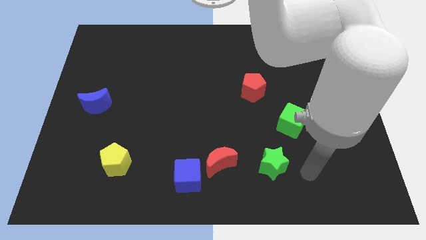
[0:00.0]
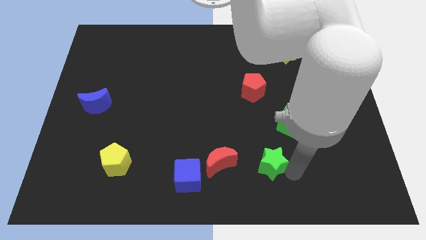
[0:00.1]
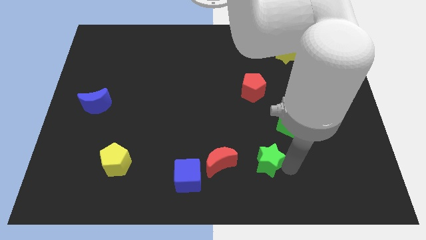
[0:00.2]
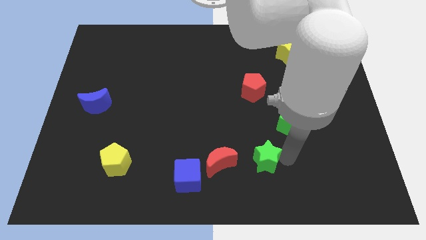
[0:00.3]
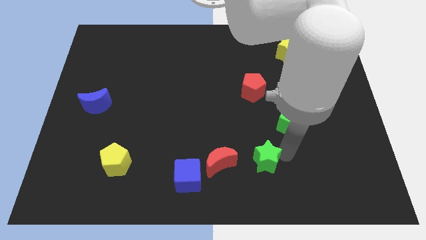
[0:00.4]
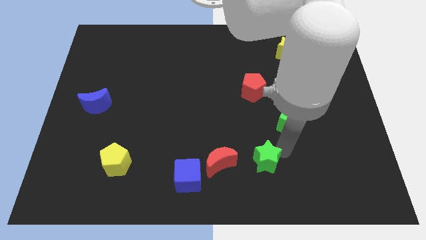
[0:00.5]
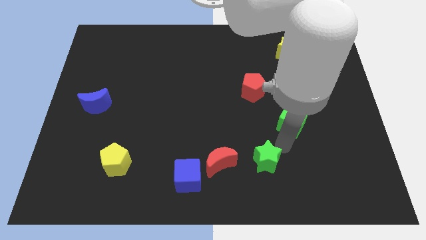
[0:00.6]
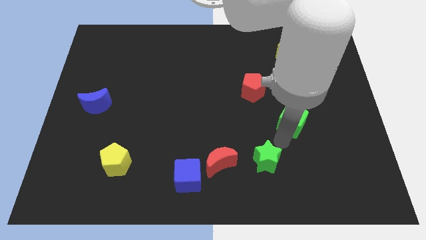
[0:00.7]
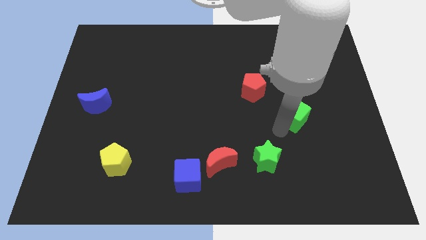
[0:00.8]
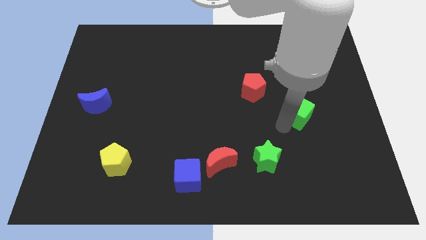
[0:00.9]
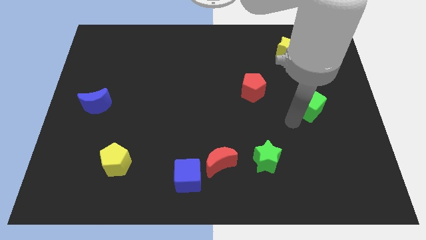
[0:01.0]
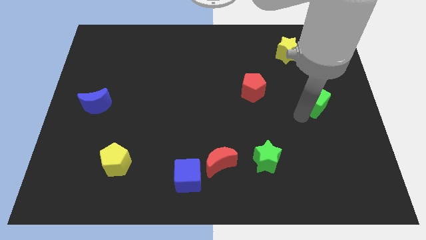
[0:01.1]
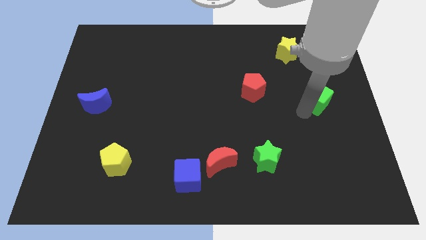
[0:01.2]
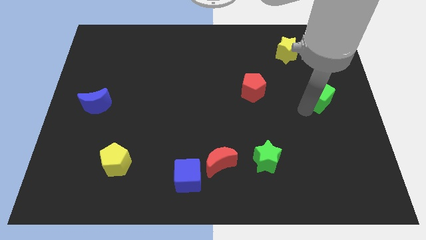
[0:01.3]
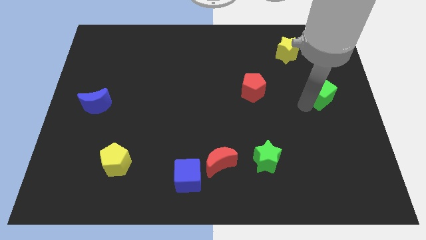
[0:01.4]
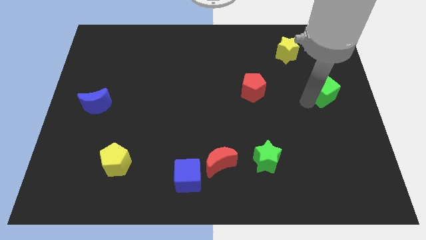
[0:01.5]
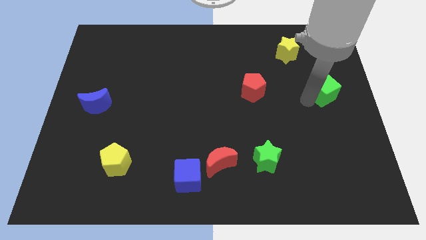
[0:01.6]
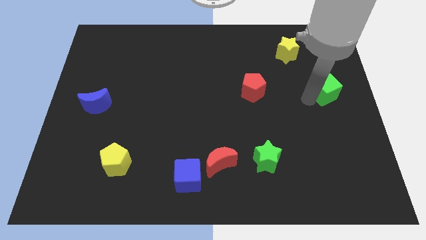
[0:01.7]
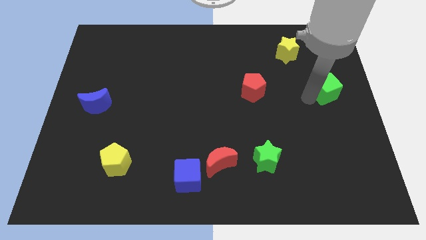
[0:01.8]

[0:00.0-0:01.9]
put the green cube horizontally to the right side of the red pentagon

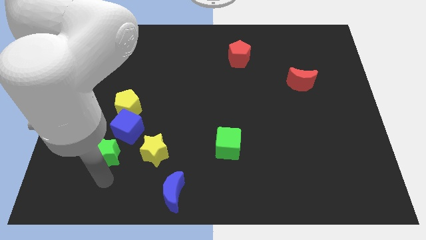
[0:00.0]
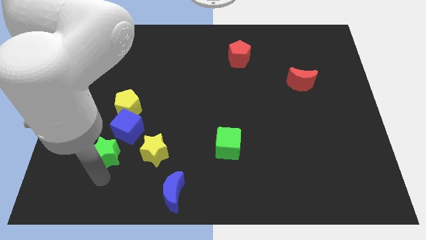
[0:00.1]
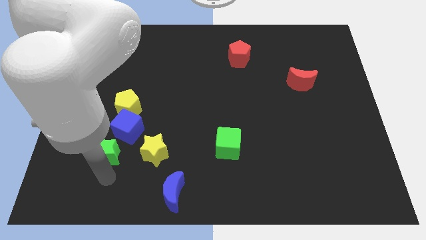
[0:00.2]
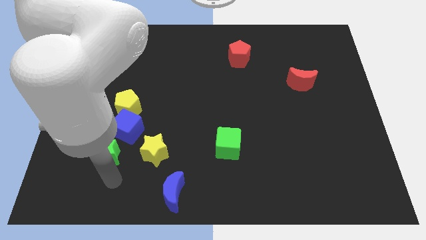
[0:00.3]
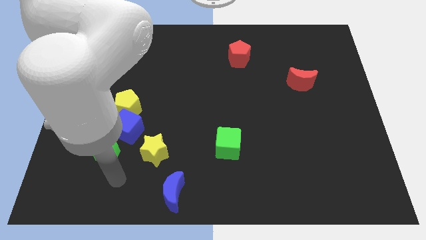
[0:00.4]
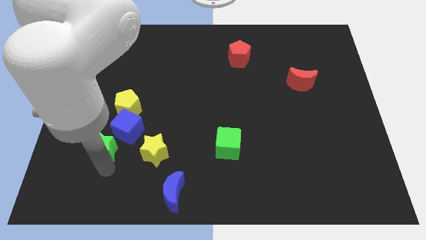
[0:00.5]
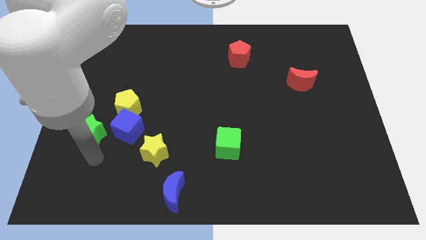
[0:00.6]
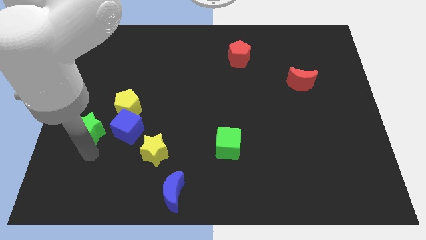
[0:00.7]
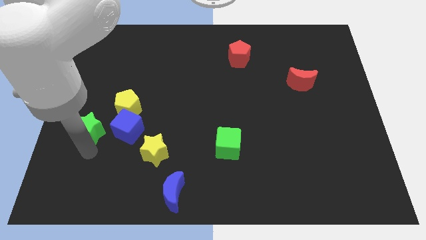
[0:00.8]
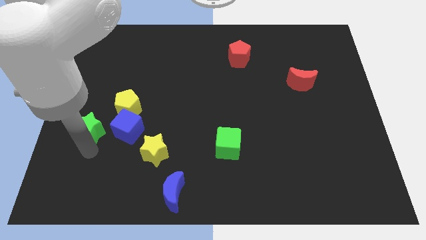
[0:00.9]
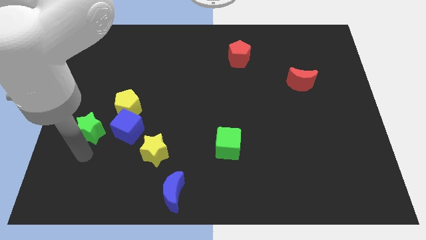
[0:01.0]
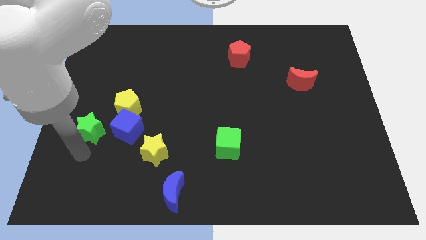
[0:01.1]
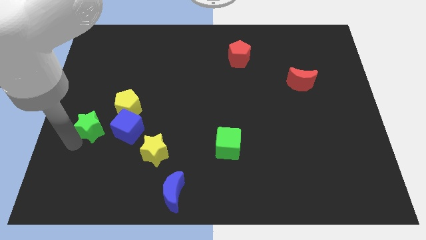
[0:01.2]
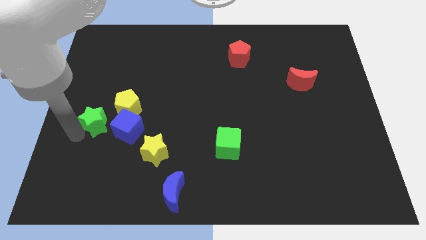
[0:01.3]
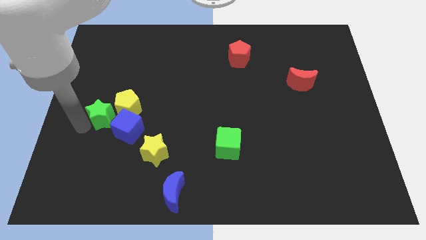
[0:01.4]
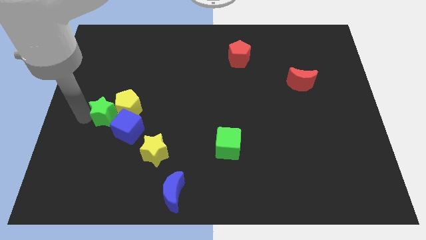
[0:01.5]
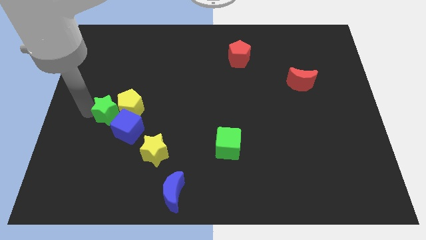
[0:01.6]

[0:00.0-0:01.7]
push the green star into the yellow pentagon

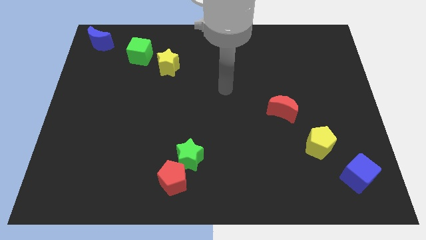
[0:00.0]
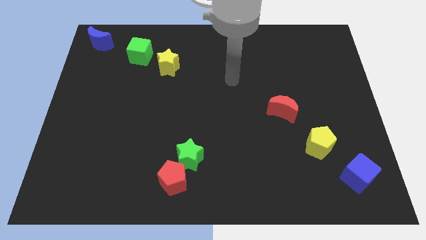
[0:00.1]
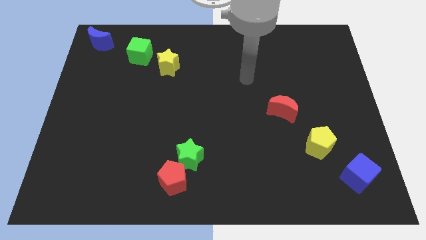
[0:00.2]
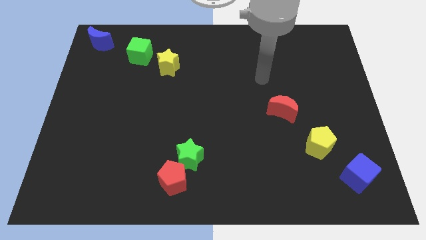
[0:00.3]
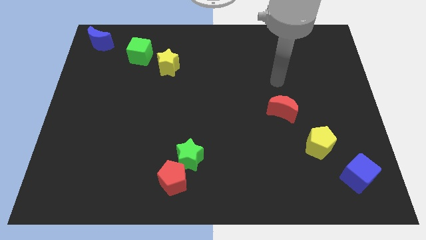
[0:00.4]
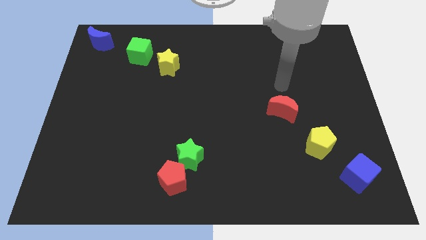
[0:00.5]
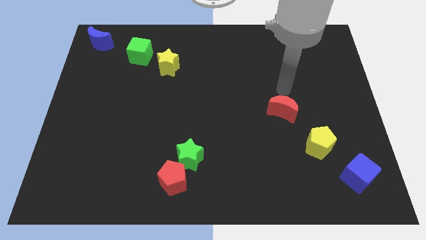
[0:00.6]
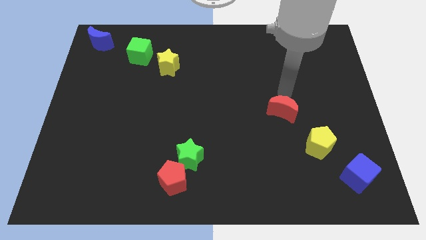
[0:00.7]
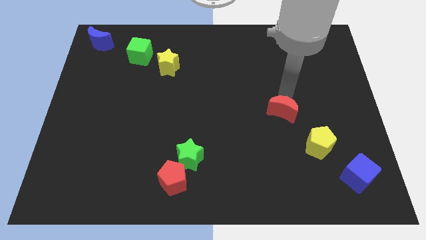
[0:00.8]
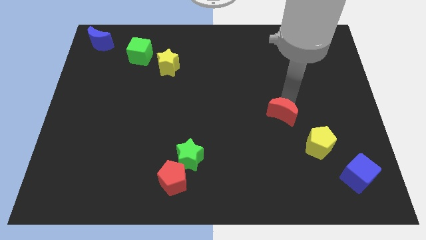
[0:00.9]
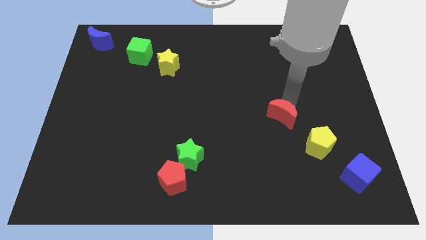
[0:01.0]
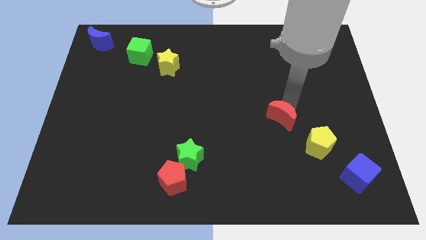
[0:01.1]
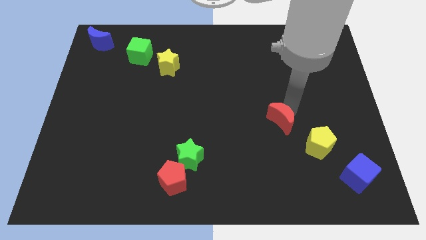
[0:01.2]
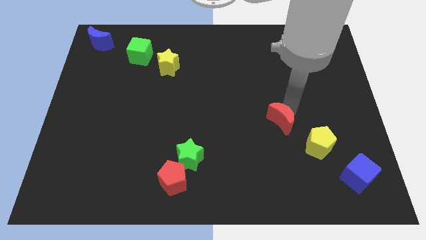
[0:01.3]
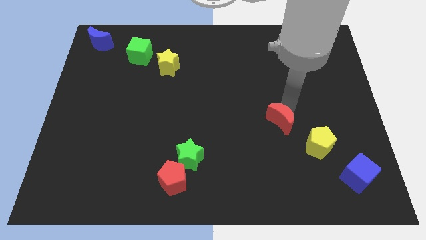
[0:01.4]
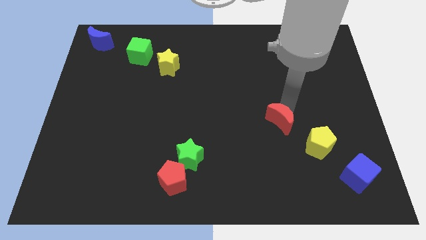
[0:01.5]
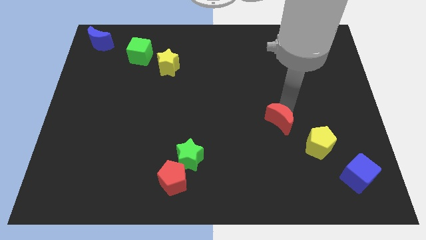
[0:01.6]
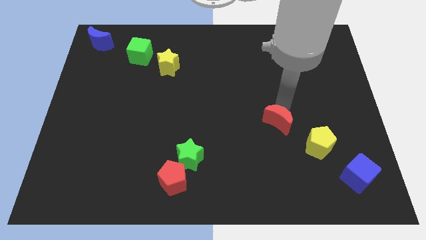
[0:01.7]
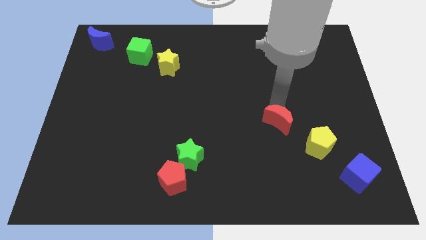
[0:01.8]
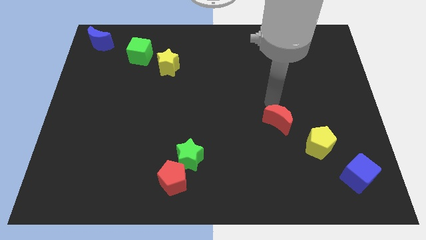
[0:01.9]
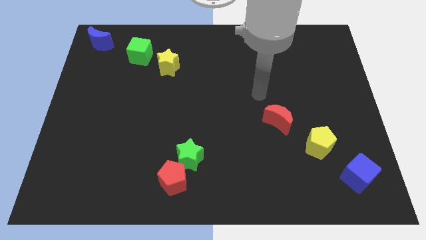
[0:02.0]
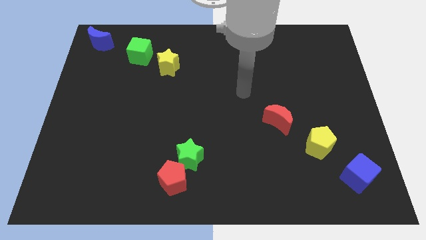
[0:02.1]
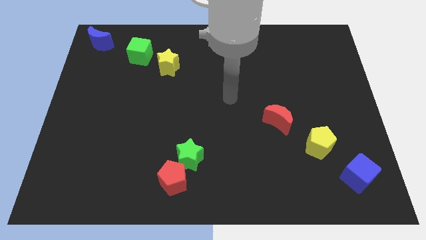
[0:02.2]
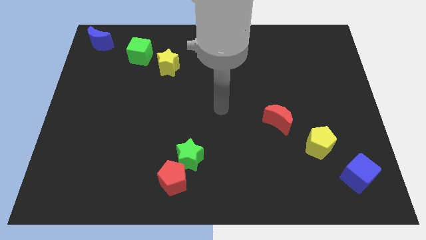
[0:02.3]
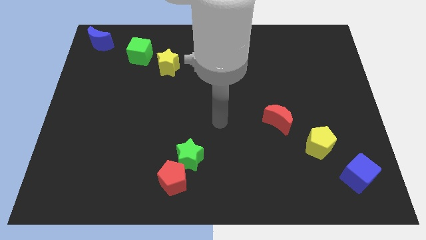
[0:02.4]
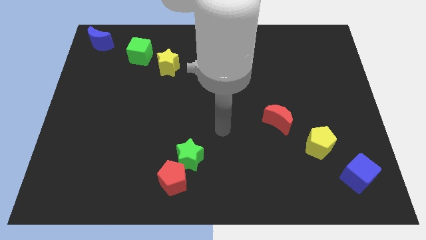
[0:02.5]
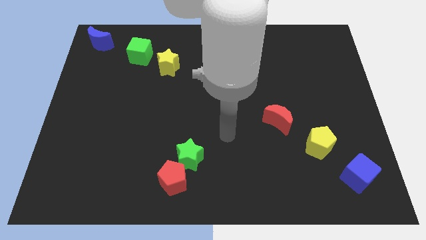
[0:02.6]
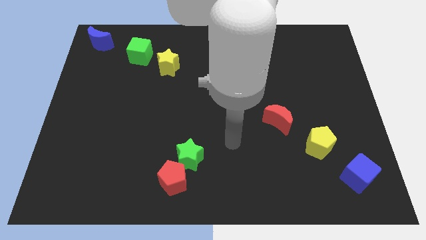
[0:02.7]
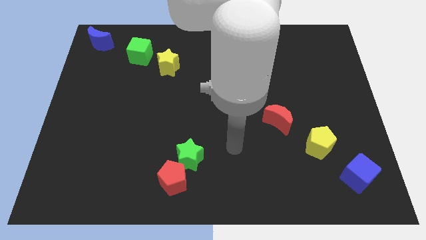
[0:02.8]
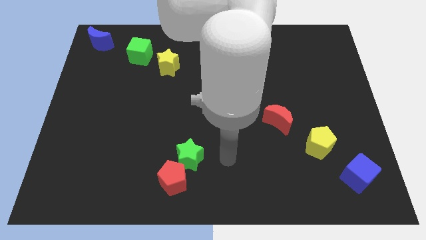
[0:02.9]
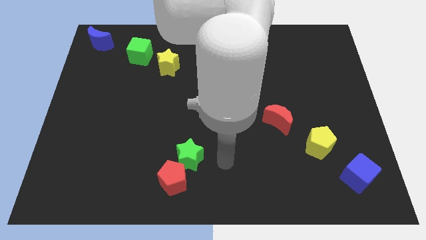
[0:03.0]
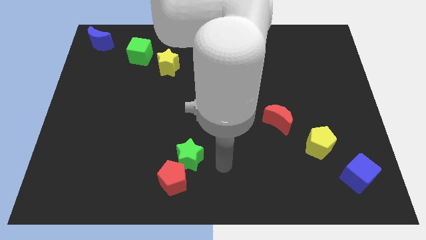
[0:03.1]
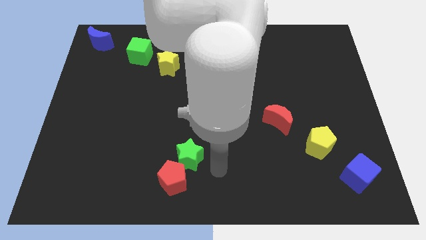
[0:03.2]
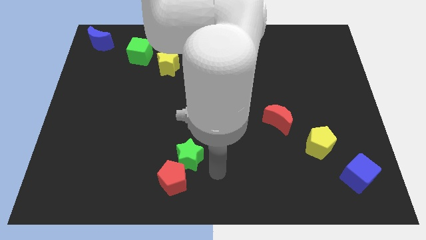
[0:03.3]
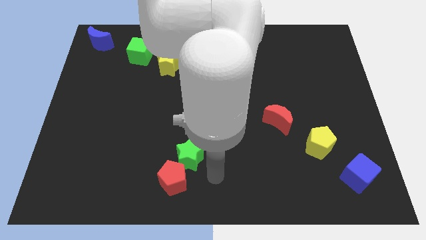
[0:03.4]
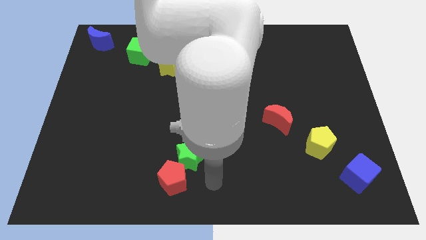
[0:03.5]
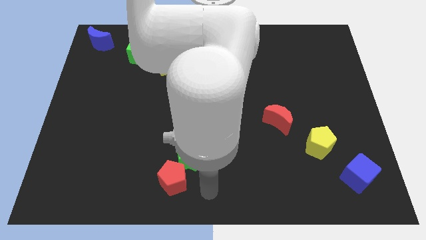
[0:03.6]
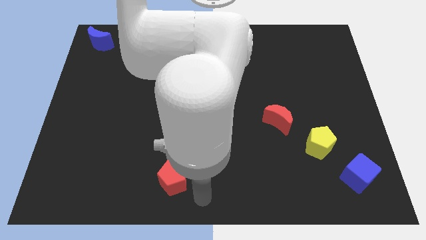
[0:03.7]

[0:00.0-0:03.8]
place your arm to the right side of the red pentagon

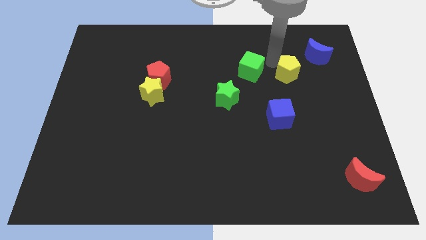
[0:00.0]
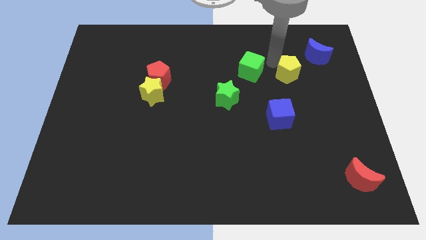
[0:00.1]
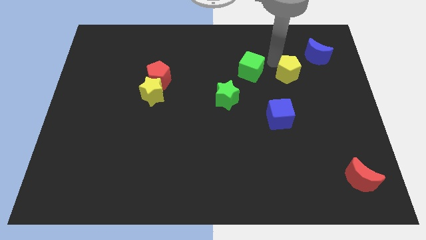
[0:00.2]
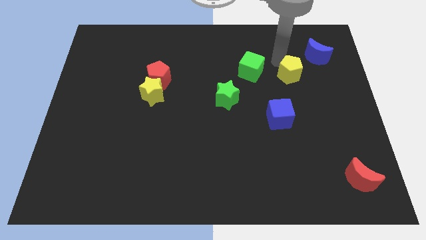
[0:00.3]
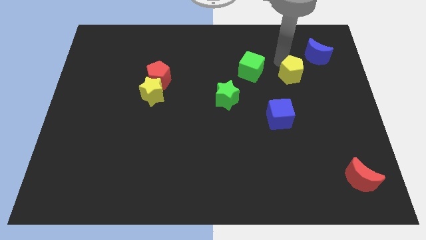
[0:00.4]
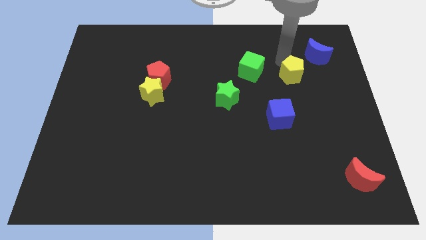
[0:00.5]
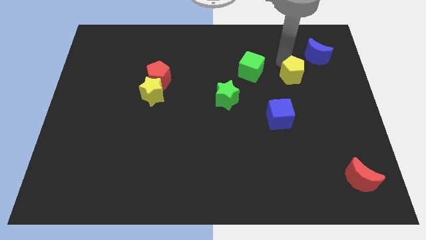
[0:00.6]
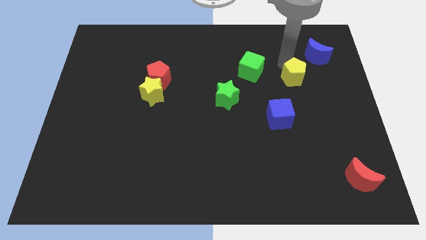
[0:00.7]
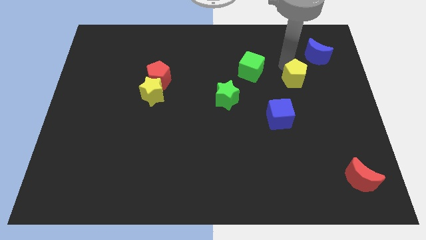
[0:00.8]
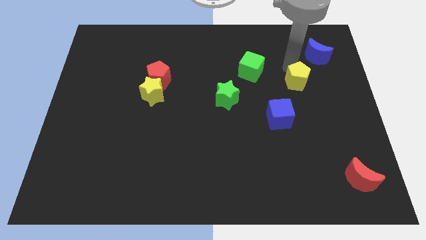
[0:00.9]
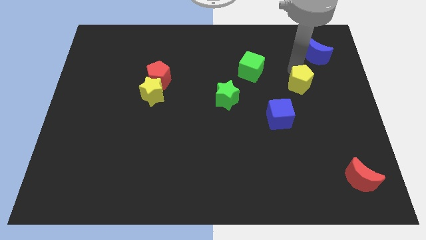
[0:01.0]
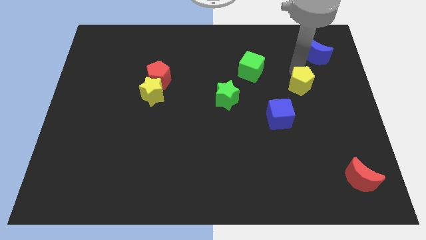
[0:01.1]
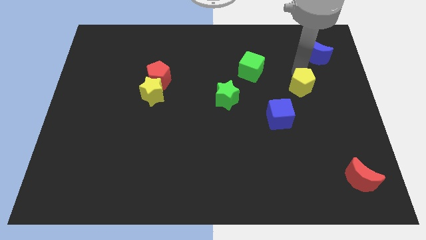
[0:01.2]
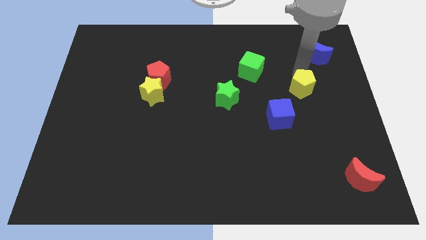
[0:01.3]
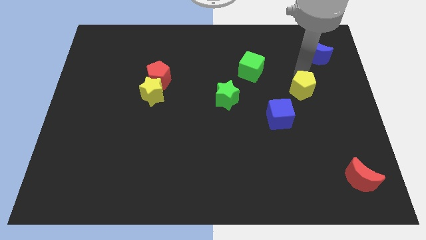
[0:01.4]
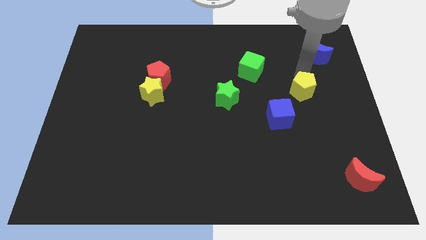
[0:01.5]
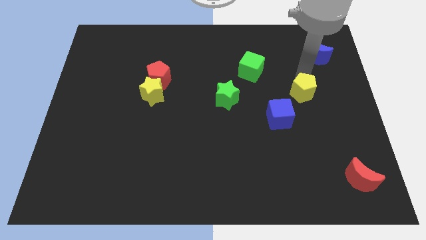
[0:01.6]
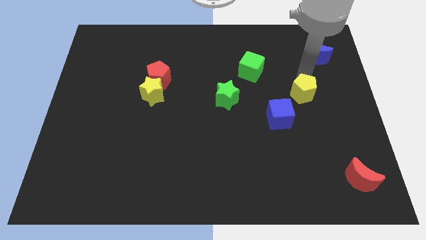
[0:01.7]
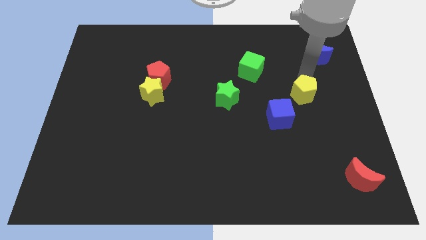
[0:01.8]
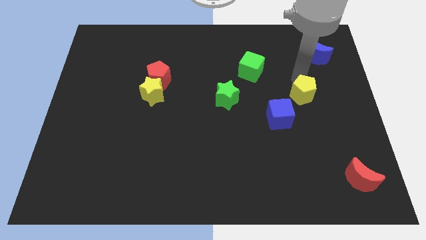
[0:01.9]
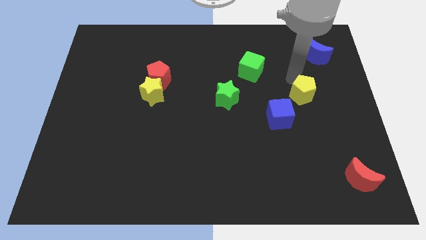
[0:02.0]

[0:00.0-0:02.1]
push the yellow pentagon to the top right corner of the blue cube
